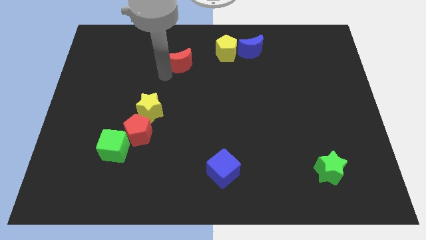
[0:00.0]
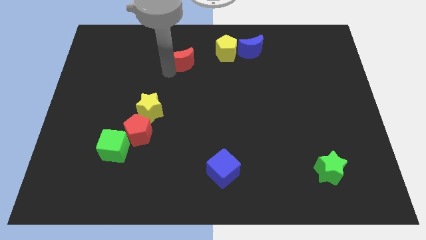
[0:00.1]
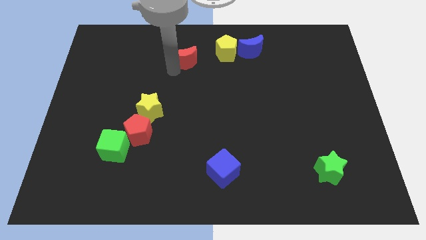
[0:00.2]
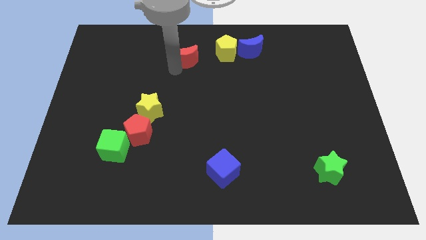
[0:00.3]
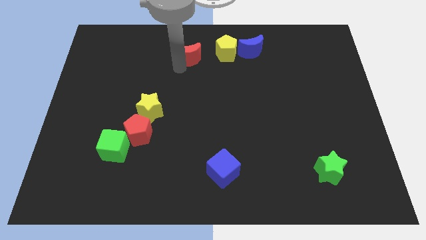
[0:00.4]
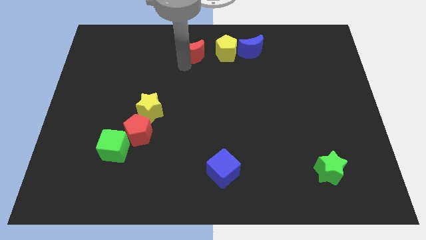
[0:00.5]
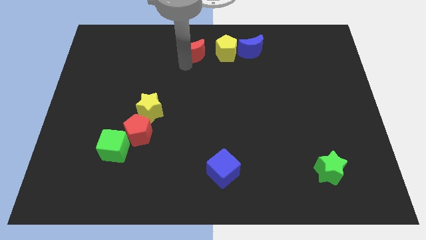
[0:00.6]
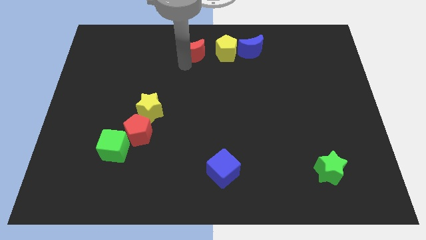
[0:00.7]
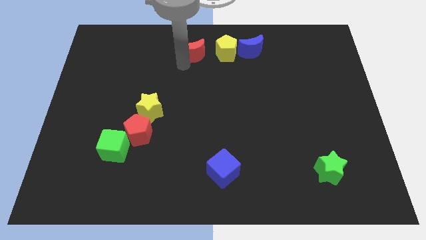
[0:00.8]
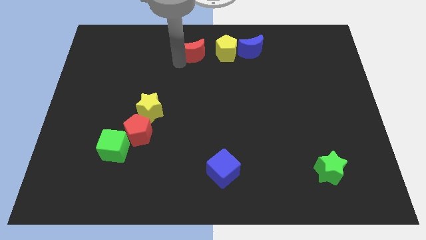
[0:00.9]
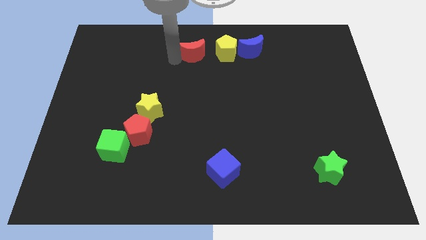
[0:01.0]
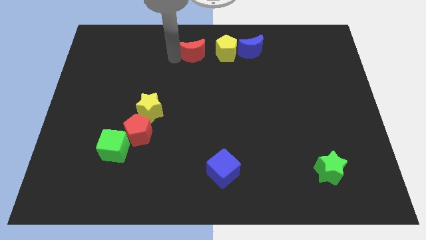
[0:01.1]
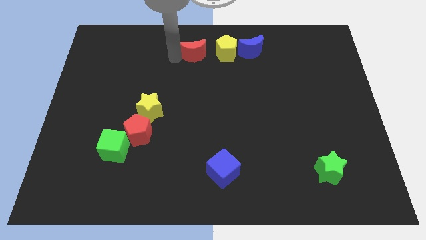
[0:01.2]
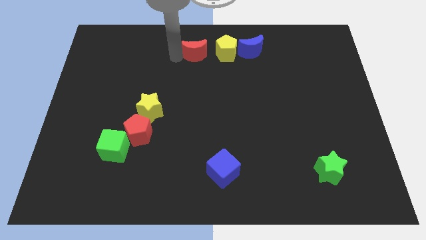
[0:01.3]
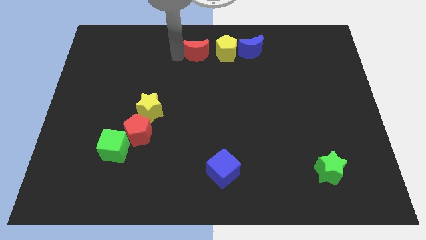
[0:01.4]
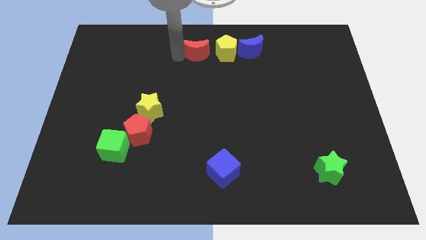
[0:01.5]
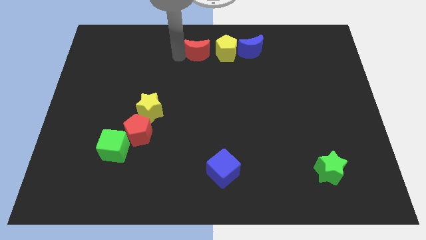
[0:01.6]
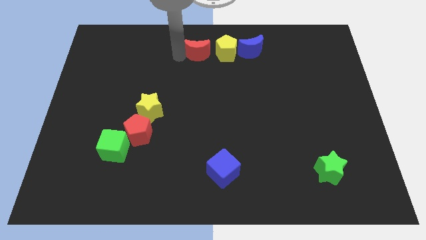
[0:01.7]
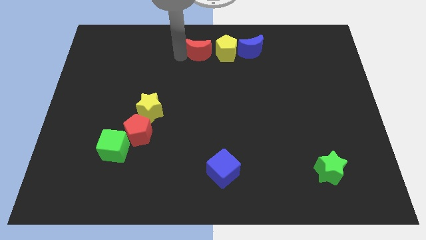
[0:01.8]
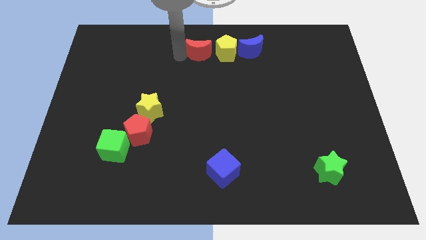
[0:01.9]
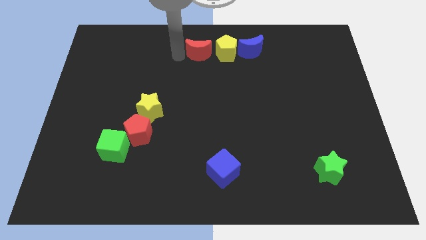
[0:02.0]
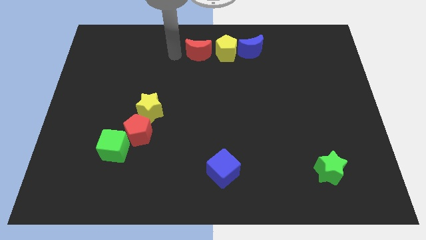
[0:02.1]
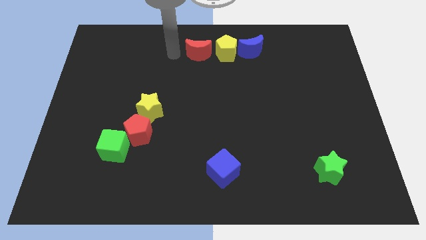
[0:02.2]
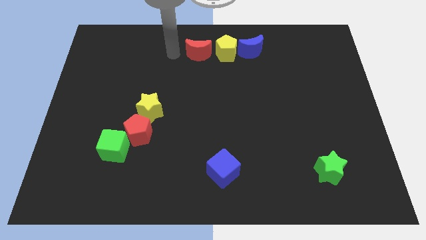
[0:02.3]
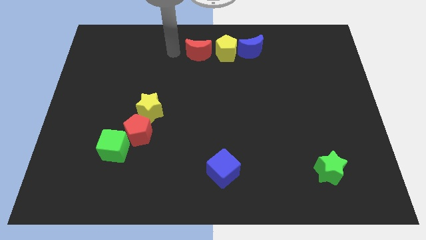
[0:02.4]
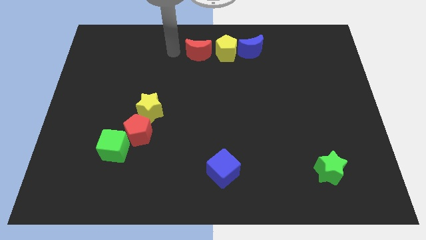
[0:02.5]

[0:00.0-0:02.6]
place the red crescent horizontal to the left of the yellow pentagon

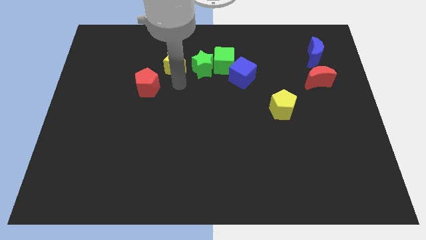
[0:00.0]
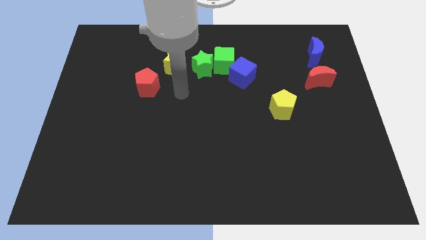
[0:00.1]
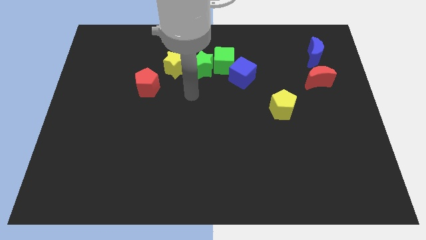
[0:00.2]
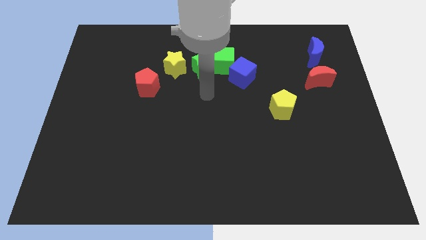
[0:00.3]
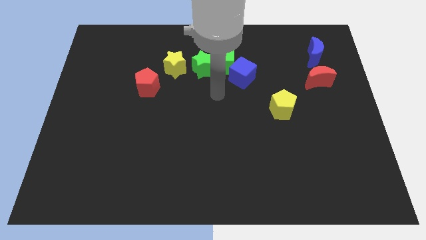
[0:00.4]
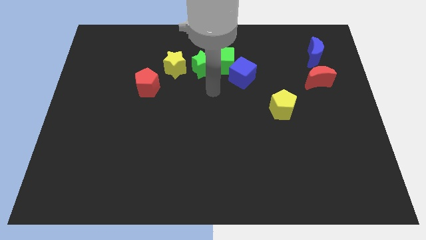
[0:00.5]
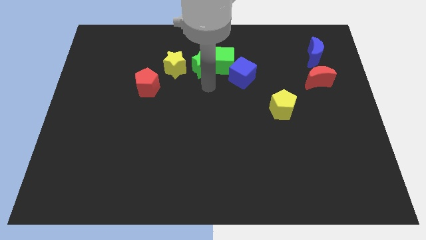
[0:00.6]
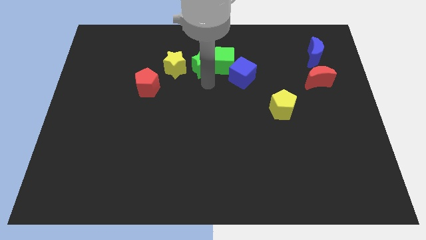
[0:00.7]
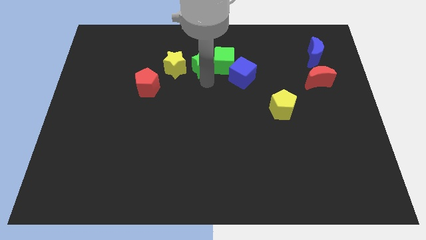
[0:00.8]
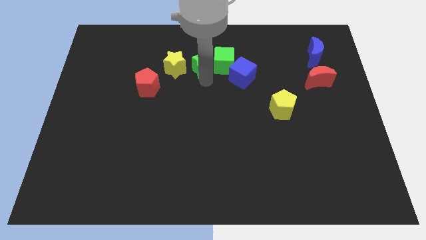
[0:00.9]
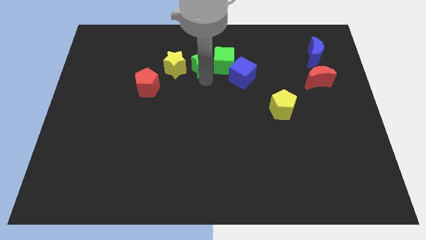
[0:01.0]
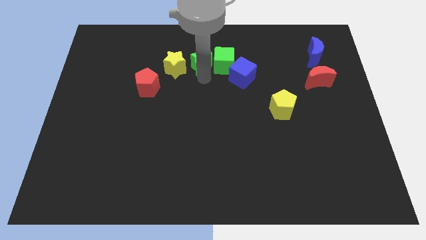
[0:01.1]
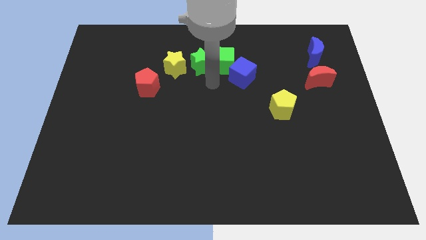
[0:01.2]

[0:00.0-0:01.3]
slightly move the green star up

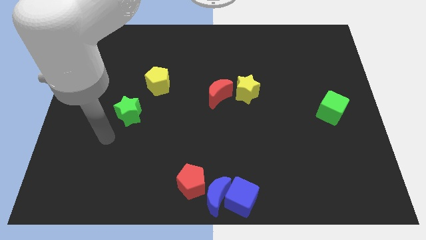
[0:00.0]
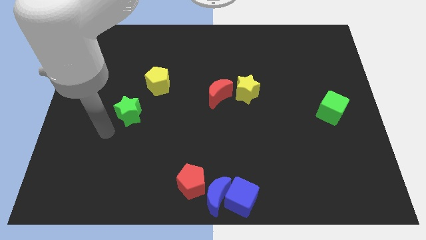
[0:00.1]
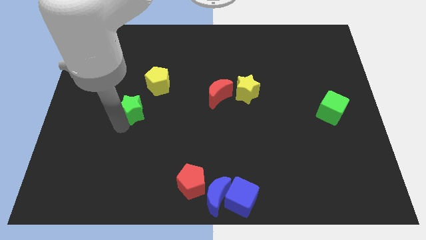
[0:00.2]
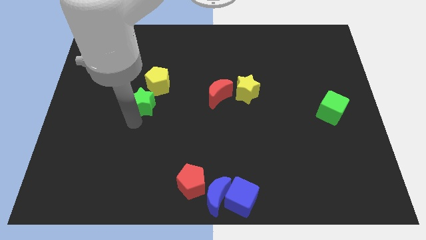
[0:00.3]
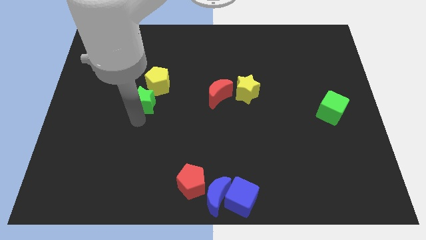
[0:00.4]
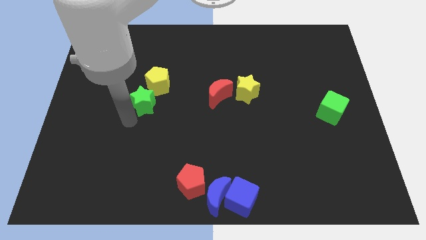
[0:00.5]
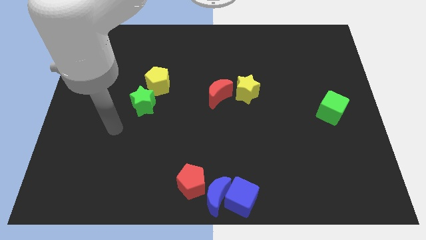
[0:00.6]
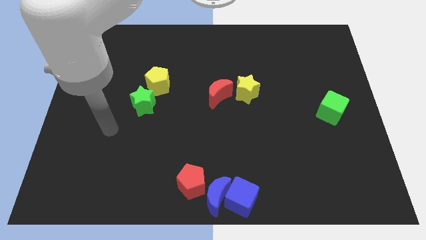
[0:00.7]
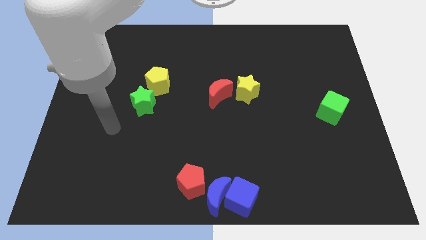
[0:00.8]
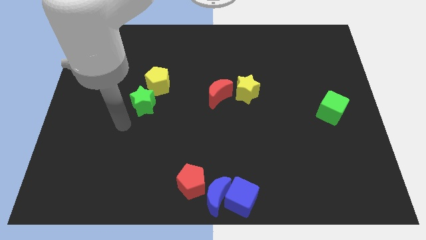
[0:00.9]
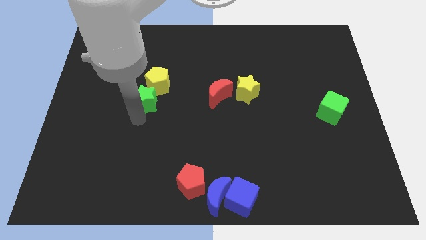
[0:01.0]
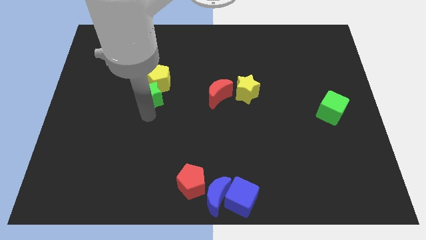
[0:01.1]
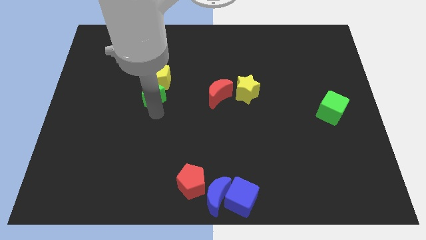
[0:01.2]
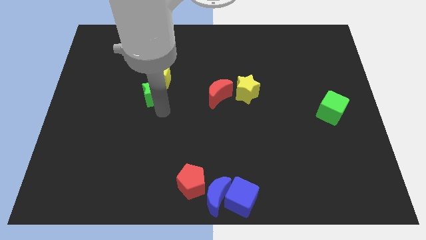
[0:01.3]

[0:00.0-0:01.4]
push the green star into the yellow pentagon

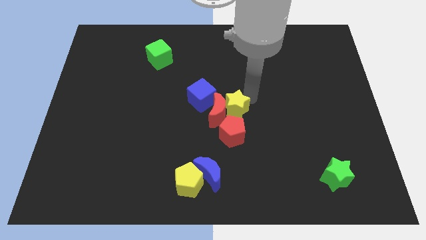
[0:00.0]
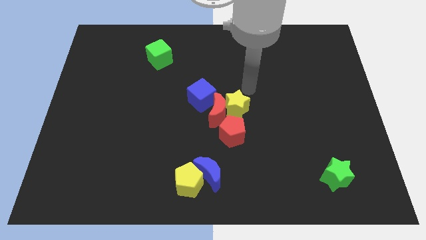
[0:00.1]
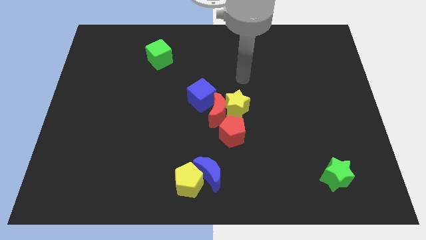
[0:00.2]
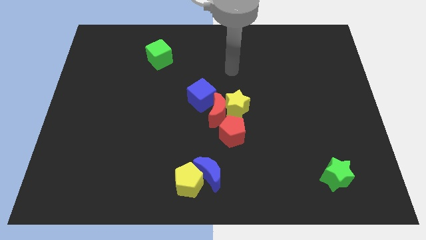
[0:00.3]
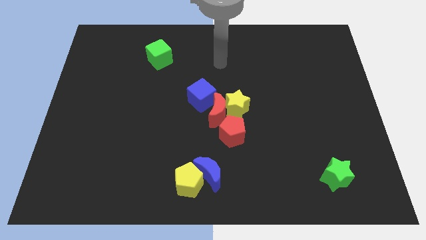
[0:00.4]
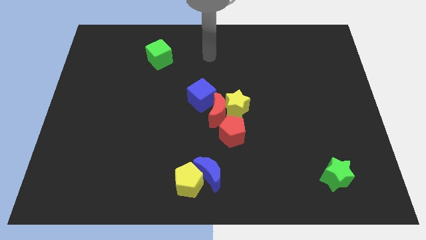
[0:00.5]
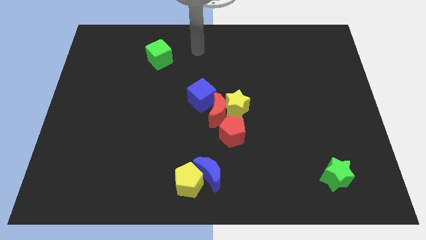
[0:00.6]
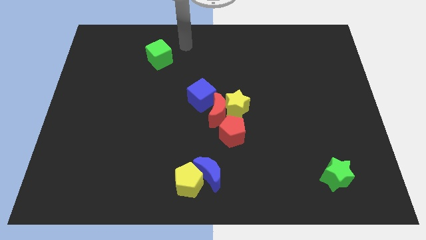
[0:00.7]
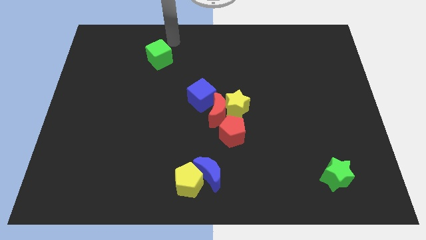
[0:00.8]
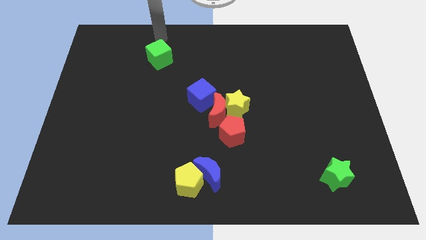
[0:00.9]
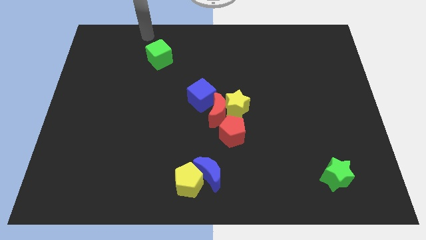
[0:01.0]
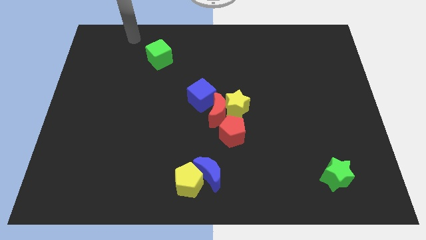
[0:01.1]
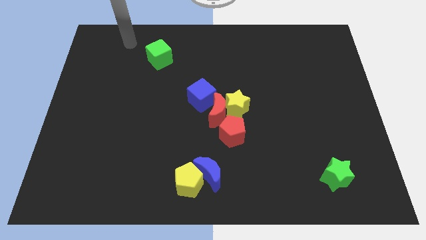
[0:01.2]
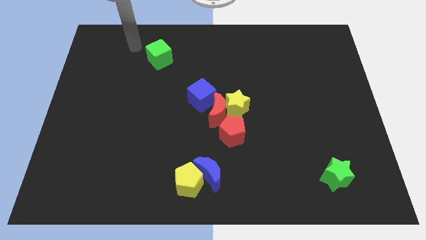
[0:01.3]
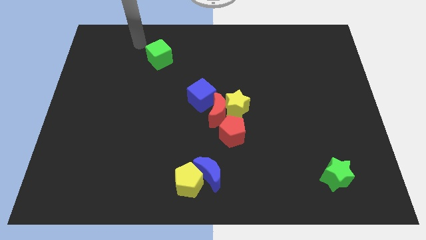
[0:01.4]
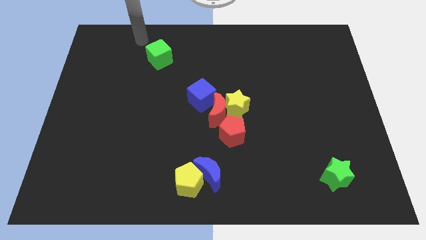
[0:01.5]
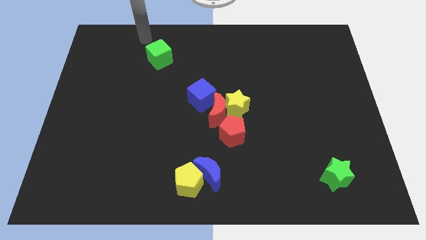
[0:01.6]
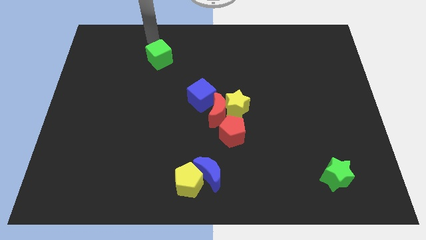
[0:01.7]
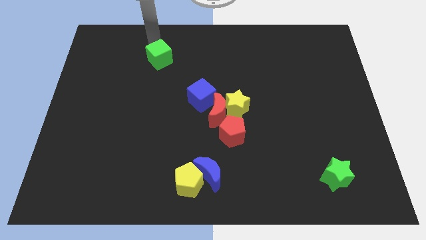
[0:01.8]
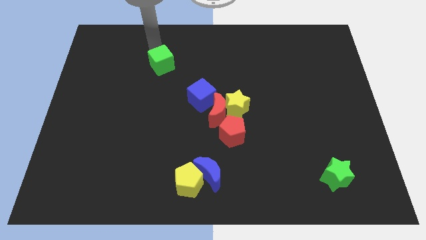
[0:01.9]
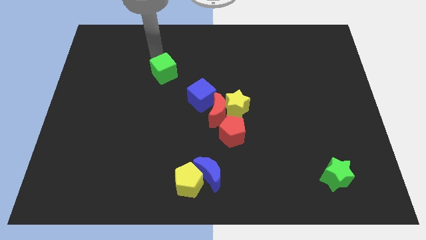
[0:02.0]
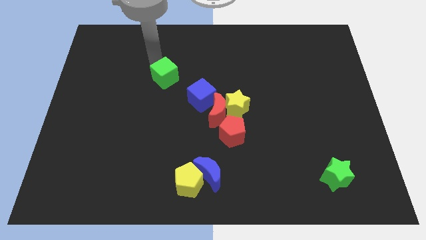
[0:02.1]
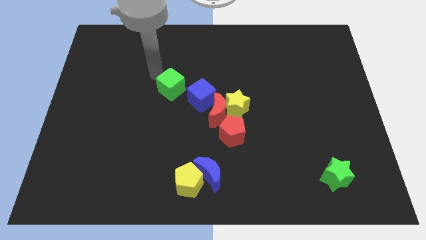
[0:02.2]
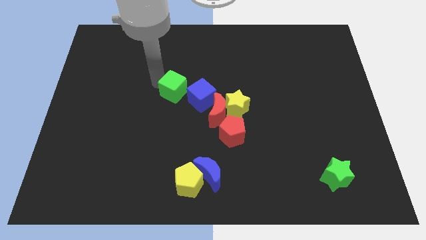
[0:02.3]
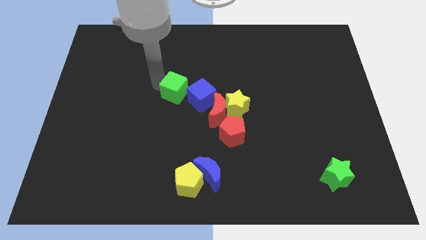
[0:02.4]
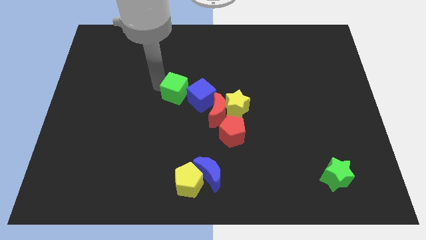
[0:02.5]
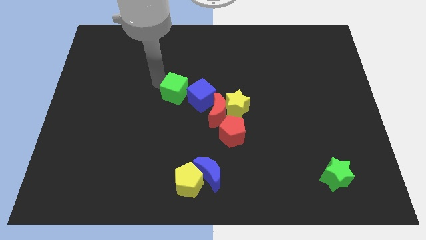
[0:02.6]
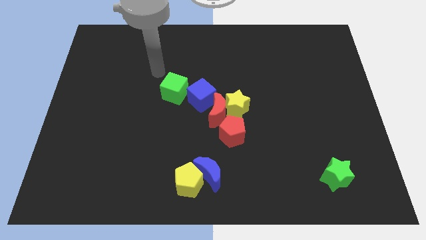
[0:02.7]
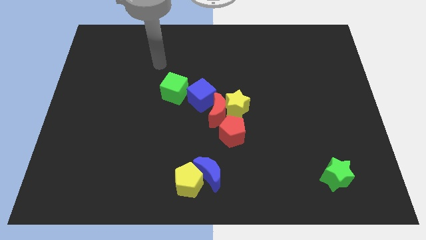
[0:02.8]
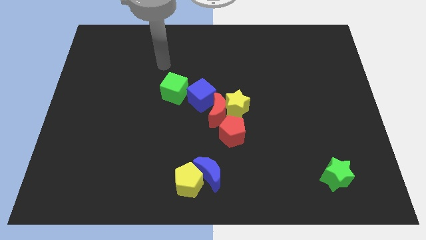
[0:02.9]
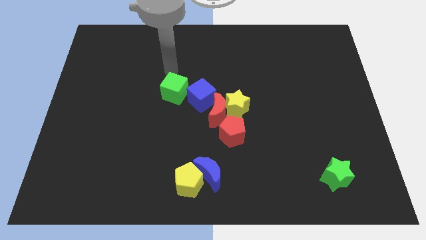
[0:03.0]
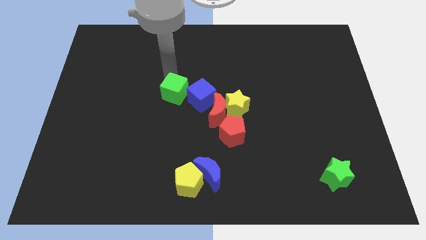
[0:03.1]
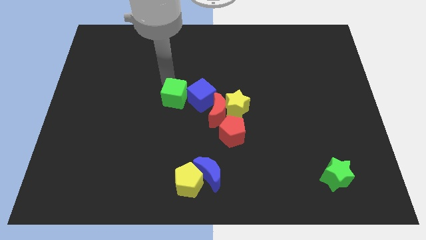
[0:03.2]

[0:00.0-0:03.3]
push the green cube to the left of the blue cube

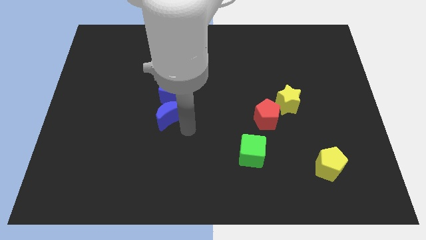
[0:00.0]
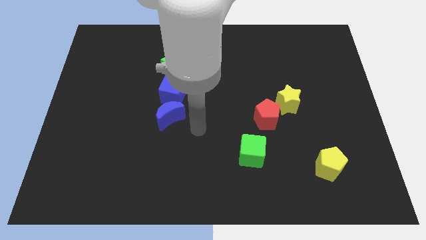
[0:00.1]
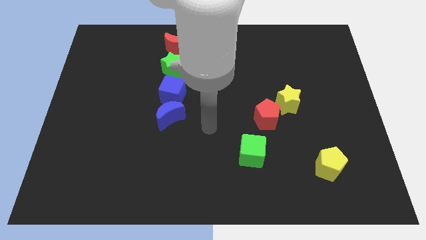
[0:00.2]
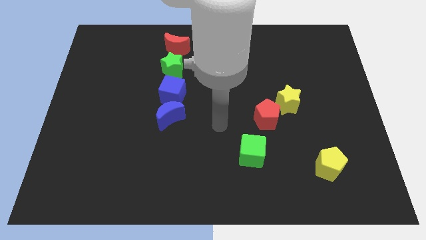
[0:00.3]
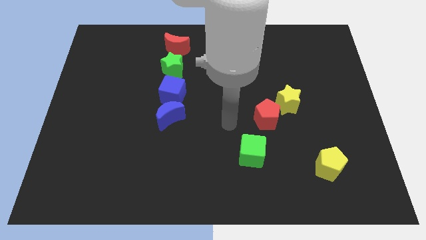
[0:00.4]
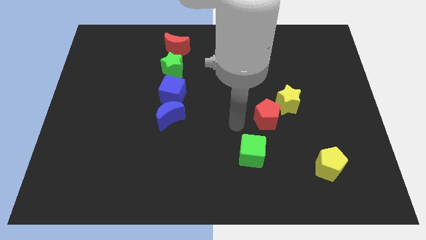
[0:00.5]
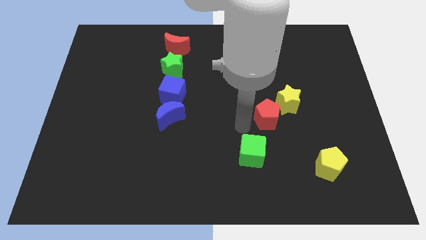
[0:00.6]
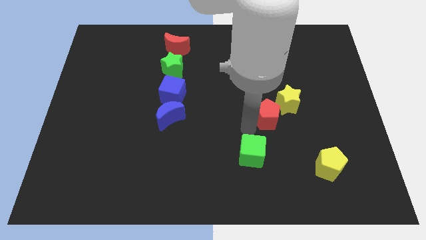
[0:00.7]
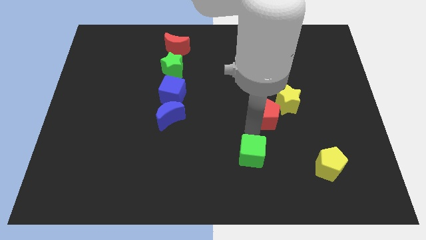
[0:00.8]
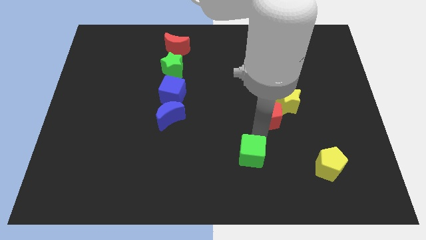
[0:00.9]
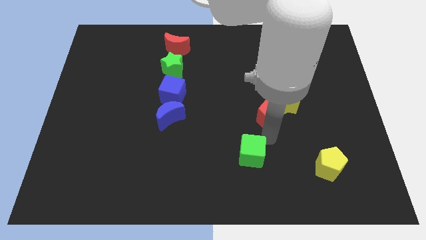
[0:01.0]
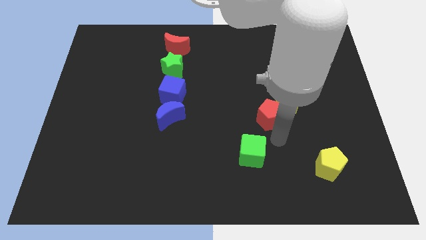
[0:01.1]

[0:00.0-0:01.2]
touch the bottom of red crescent
